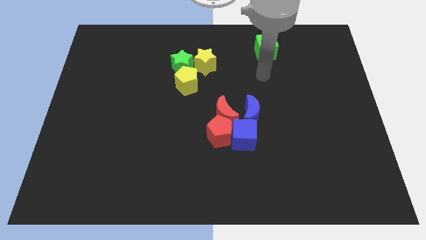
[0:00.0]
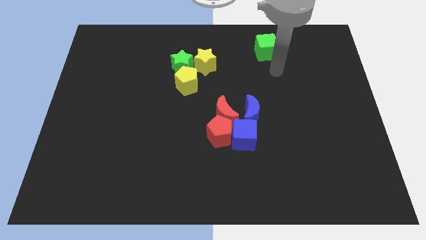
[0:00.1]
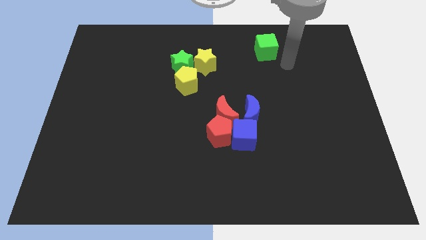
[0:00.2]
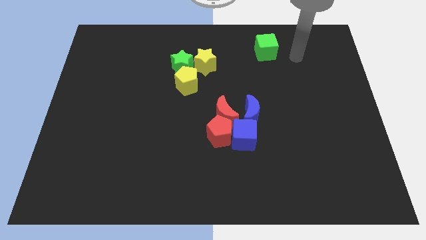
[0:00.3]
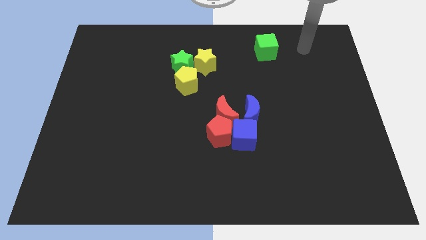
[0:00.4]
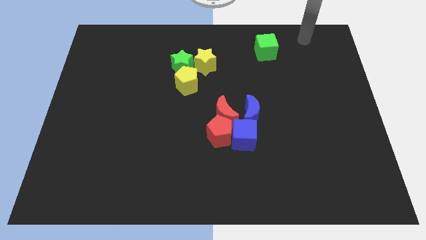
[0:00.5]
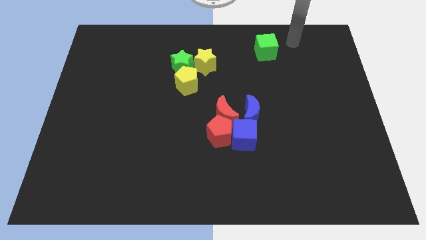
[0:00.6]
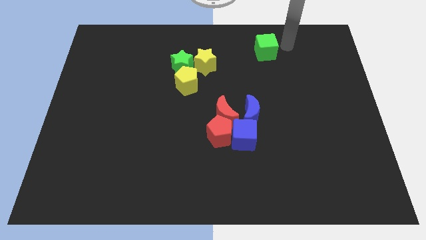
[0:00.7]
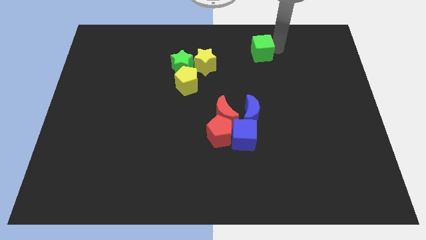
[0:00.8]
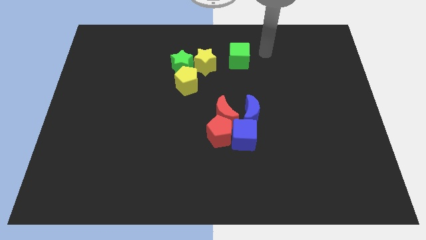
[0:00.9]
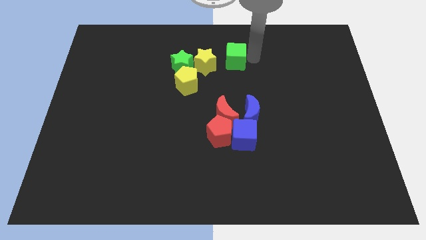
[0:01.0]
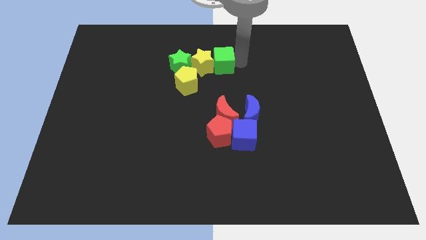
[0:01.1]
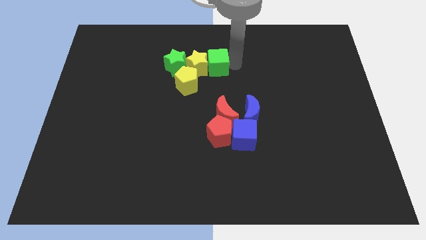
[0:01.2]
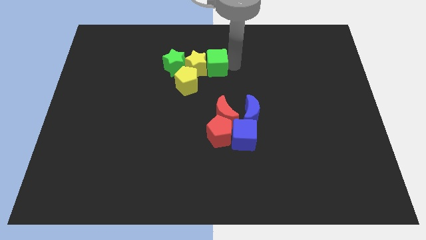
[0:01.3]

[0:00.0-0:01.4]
push green cube above red crescent

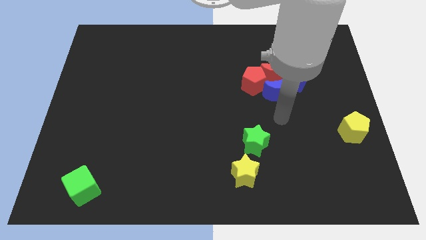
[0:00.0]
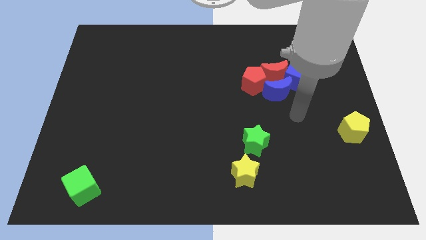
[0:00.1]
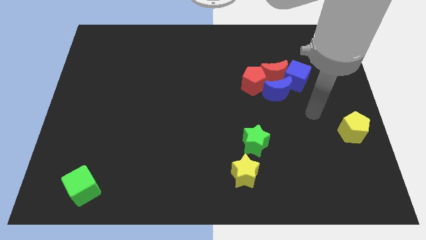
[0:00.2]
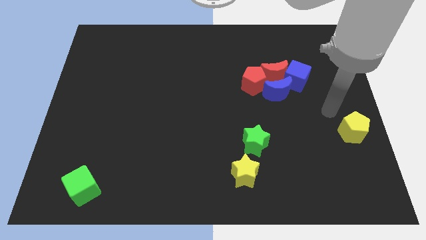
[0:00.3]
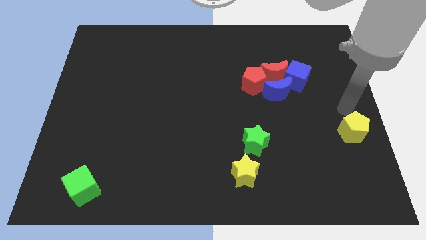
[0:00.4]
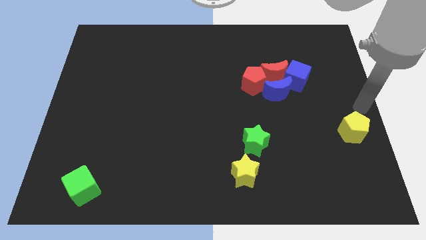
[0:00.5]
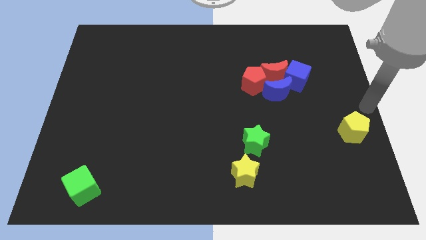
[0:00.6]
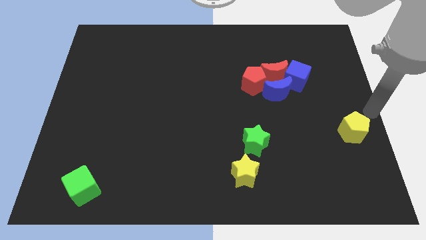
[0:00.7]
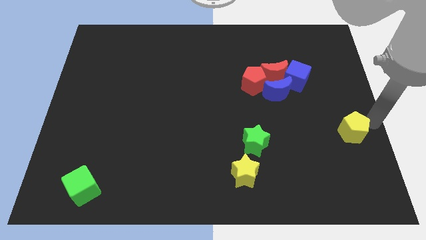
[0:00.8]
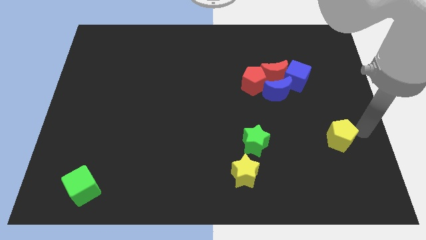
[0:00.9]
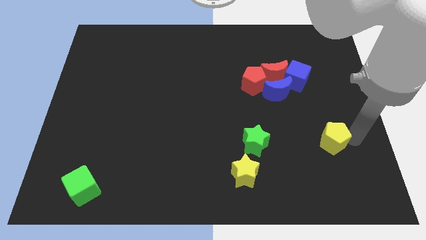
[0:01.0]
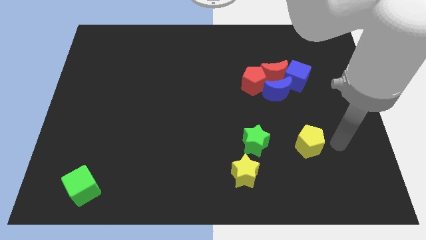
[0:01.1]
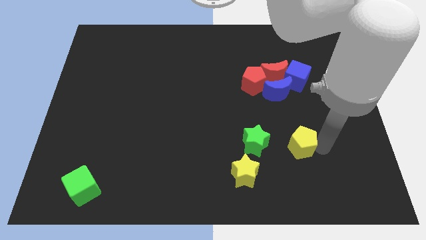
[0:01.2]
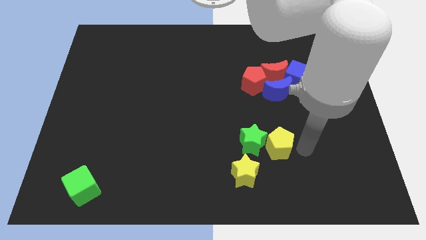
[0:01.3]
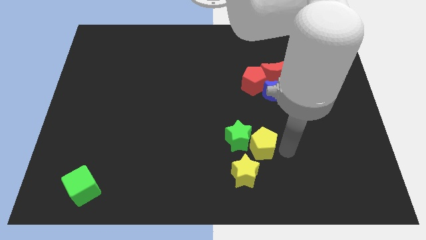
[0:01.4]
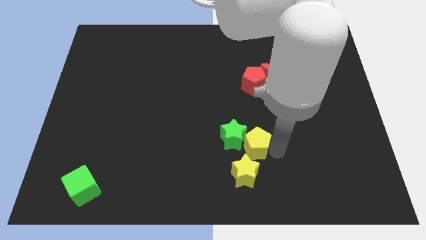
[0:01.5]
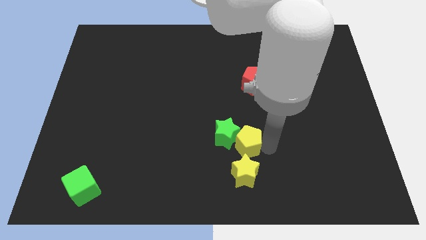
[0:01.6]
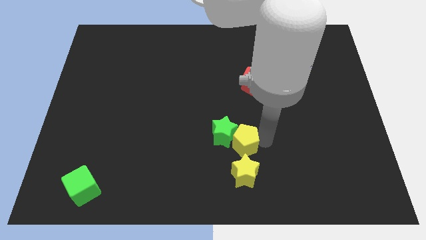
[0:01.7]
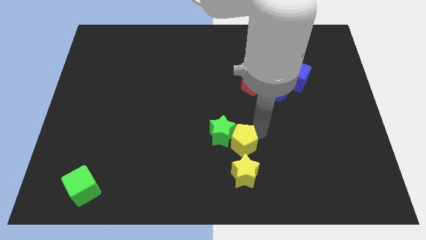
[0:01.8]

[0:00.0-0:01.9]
push the green star with yellow pentagon

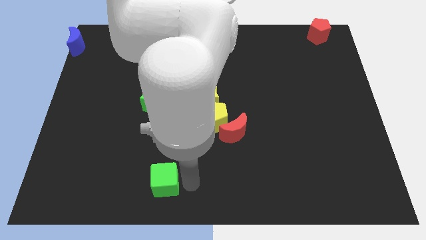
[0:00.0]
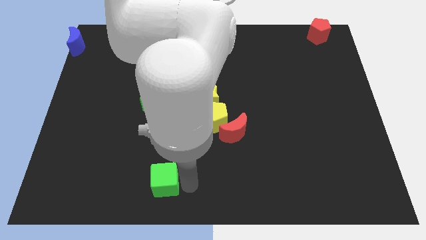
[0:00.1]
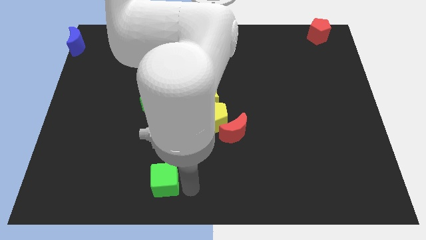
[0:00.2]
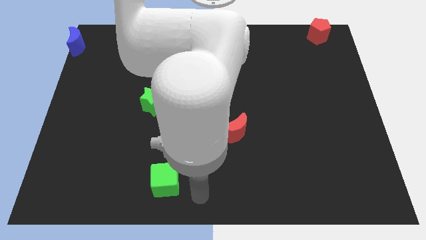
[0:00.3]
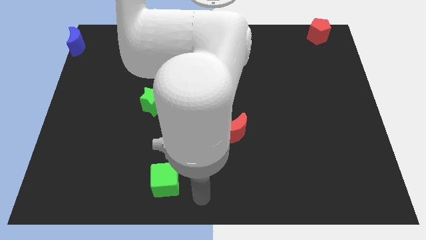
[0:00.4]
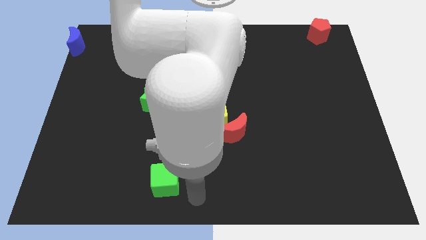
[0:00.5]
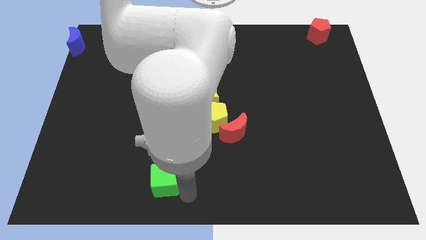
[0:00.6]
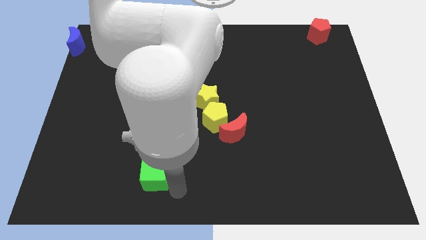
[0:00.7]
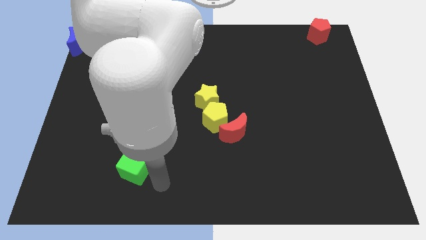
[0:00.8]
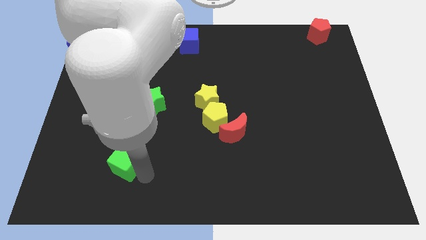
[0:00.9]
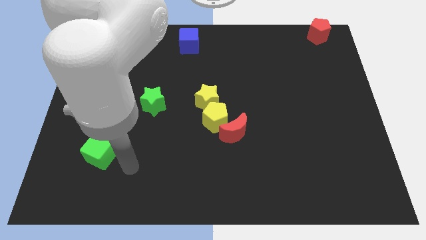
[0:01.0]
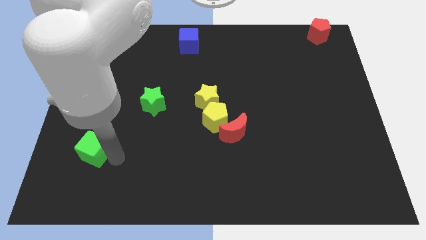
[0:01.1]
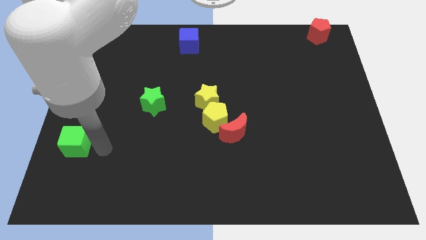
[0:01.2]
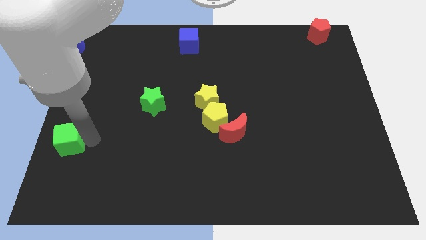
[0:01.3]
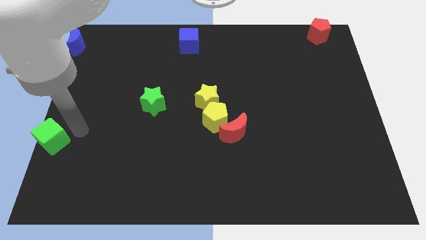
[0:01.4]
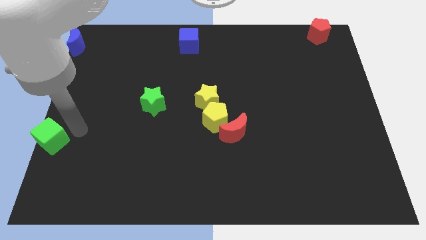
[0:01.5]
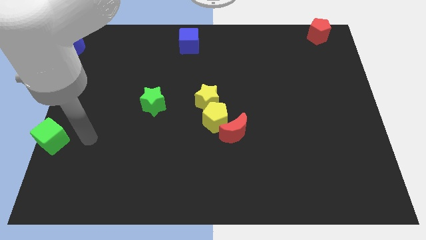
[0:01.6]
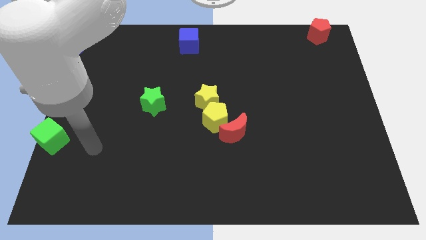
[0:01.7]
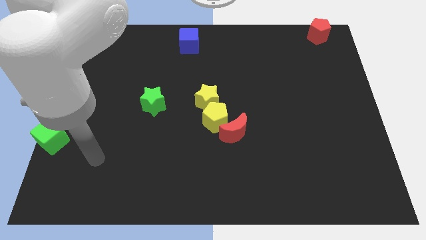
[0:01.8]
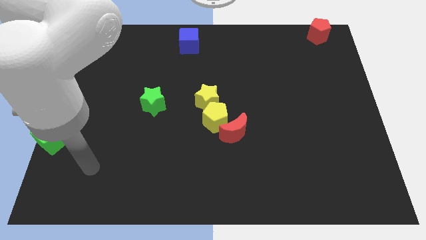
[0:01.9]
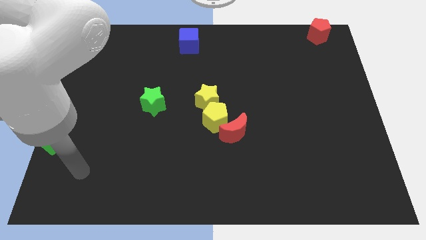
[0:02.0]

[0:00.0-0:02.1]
push the green cube towards the left center

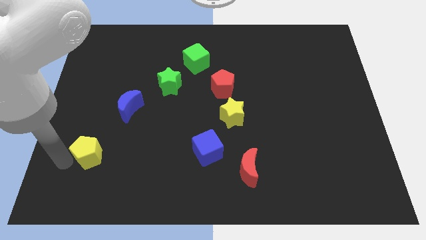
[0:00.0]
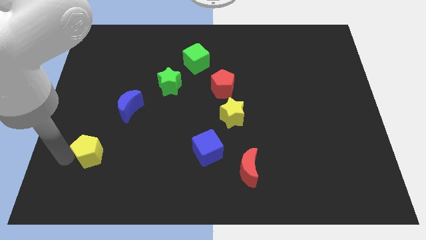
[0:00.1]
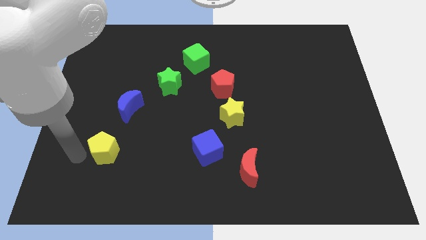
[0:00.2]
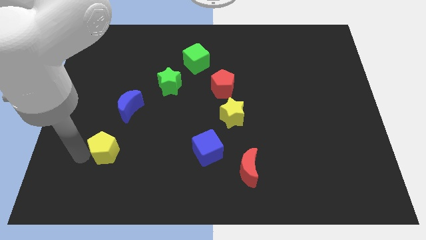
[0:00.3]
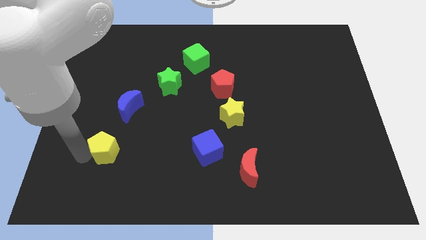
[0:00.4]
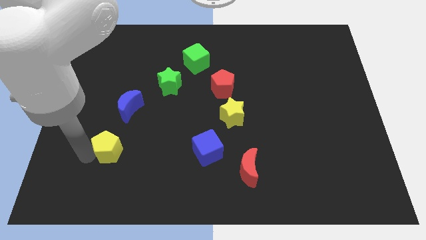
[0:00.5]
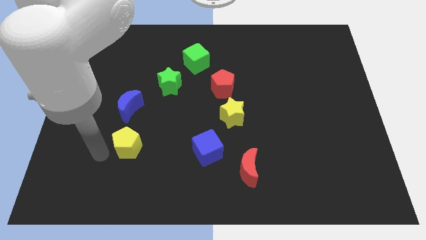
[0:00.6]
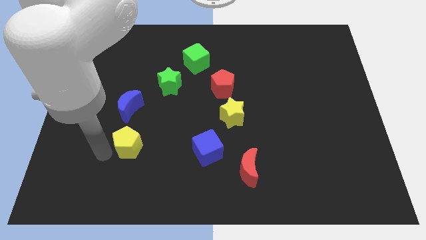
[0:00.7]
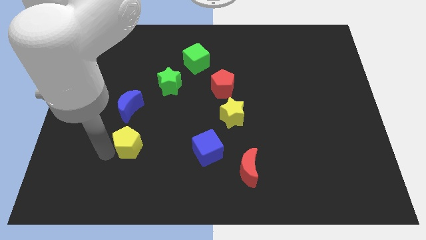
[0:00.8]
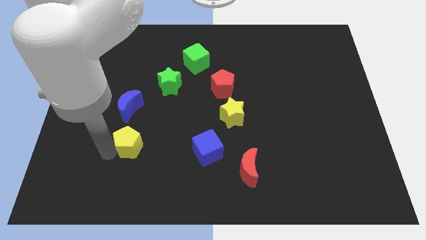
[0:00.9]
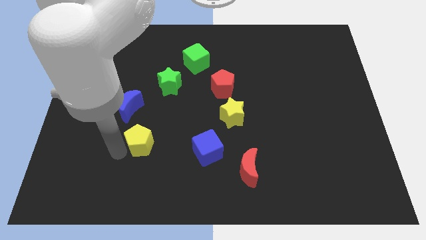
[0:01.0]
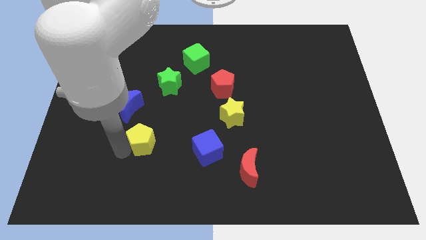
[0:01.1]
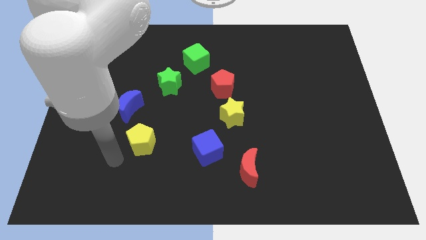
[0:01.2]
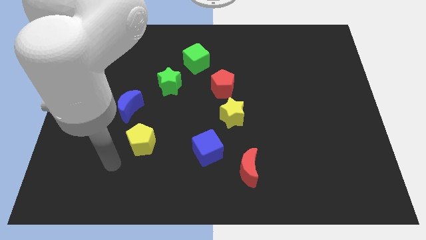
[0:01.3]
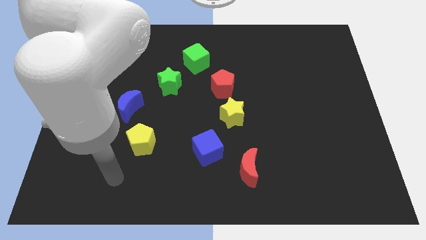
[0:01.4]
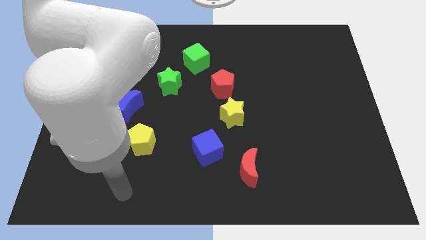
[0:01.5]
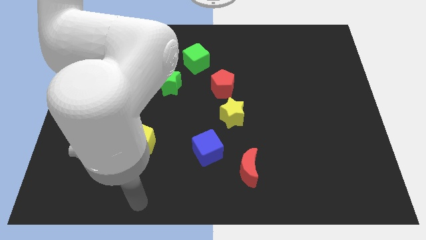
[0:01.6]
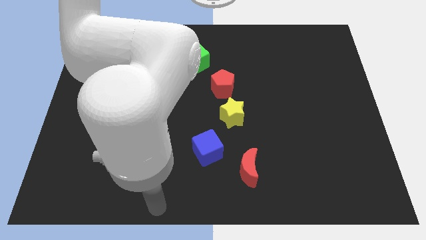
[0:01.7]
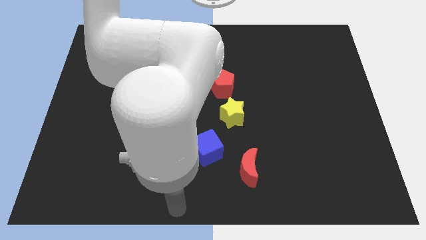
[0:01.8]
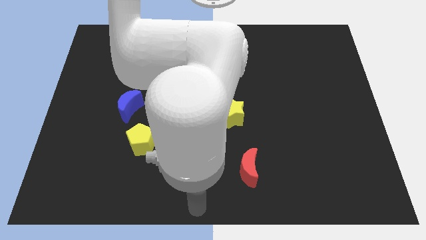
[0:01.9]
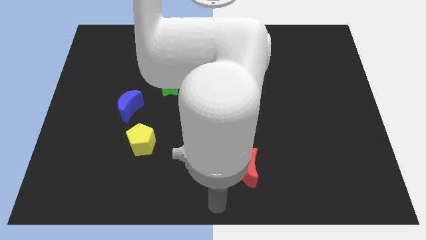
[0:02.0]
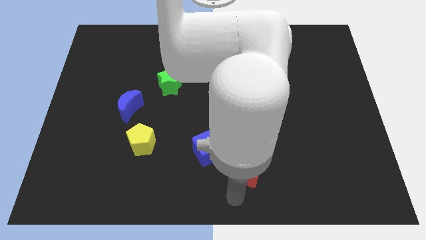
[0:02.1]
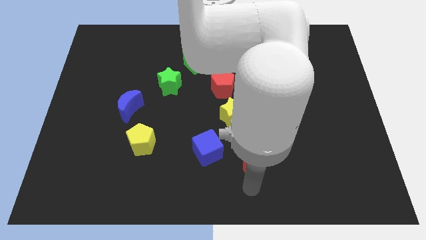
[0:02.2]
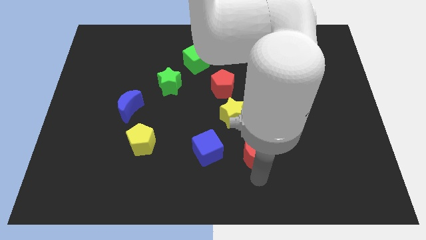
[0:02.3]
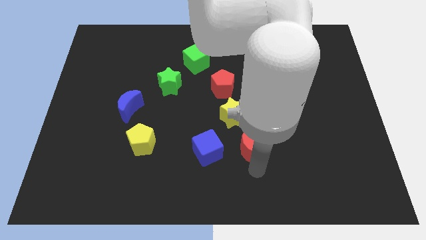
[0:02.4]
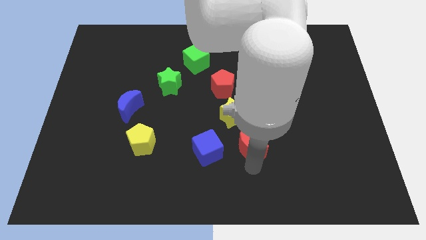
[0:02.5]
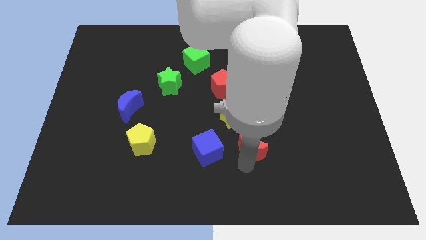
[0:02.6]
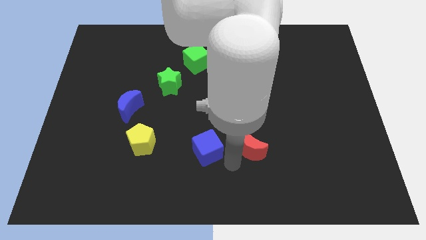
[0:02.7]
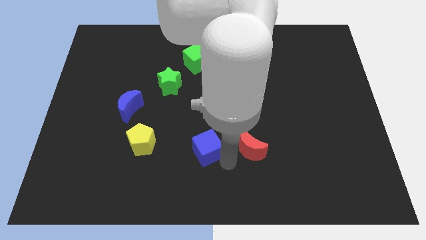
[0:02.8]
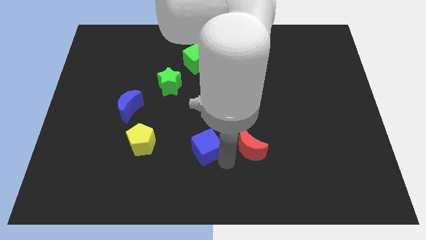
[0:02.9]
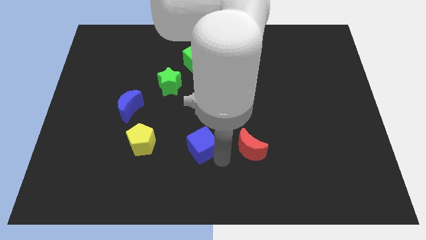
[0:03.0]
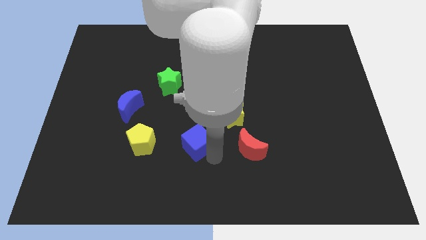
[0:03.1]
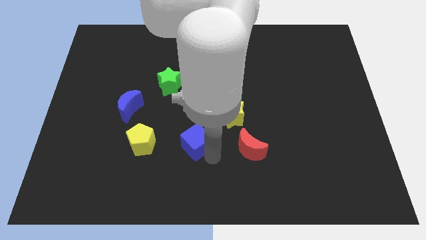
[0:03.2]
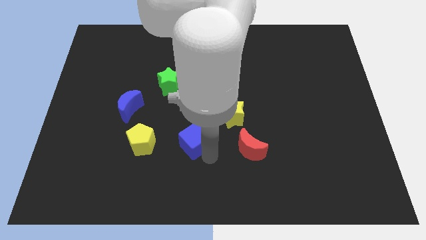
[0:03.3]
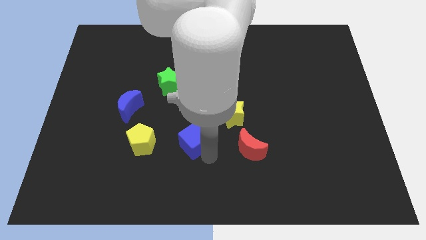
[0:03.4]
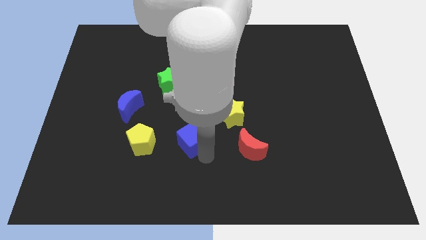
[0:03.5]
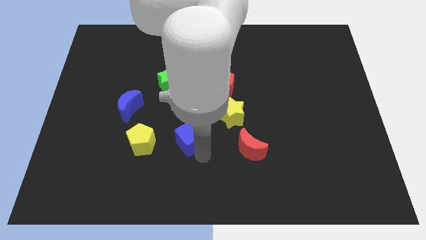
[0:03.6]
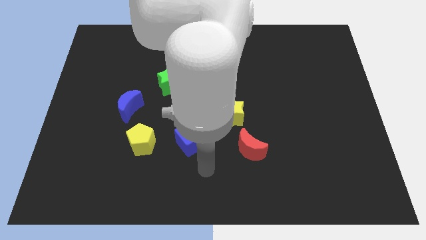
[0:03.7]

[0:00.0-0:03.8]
push blue cube in between yellow star and yellow pentagon

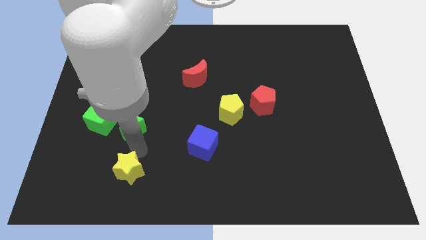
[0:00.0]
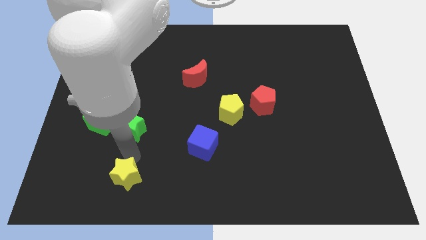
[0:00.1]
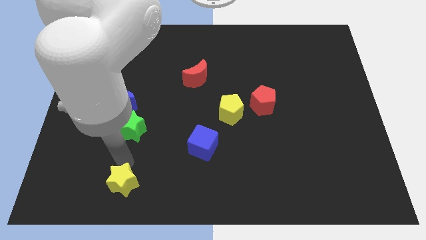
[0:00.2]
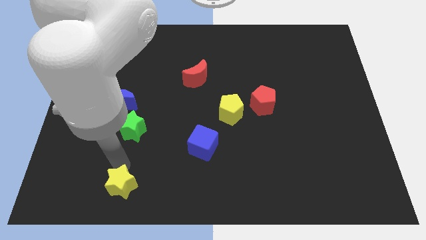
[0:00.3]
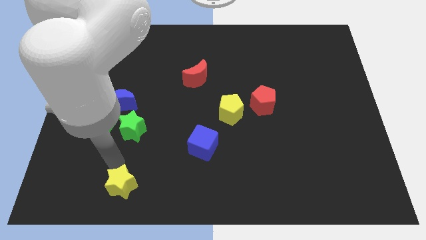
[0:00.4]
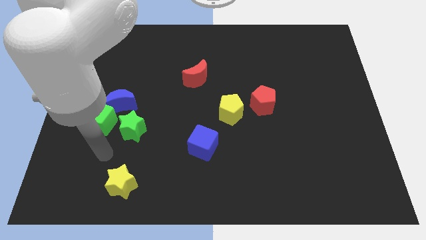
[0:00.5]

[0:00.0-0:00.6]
push the yellow star towards down
